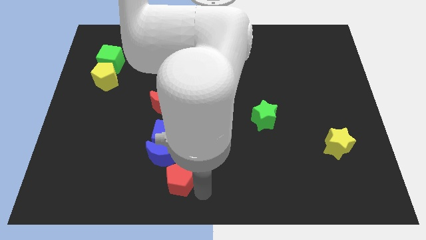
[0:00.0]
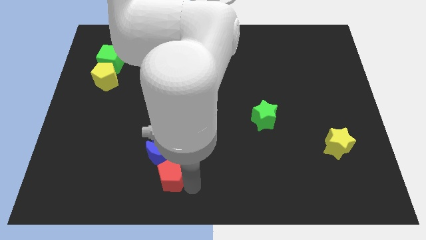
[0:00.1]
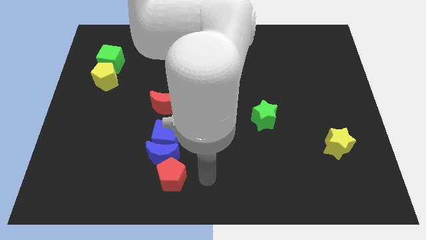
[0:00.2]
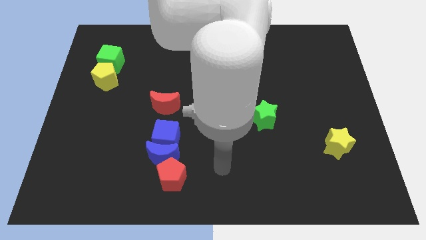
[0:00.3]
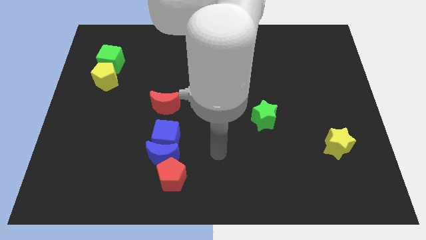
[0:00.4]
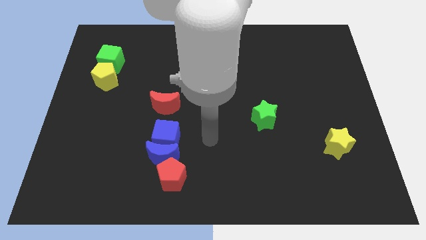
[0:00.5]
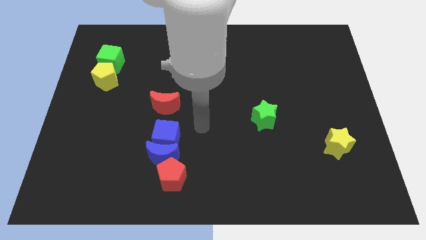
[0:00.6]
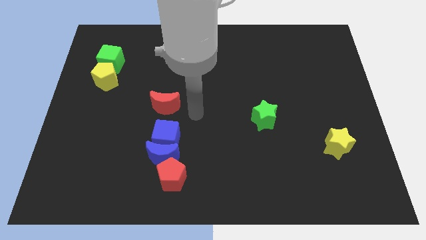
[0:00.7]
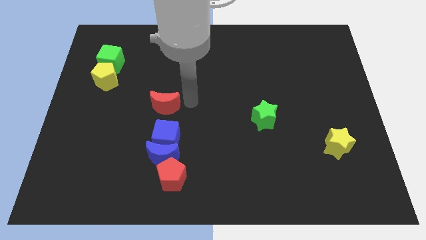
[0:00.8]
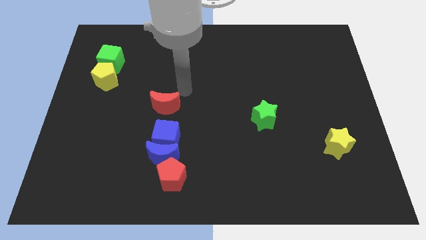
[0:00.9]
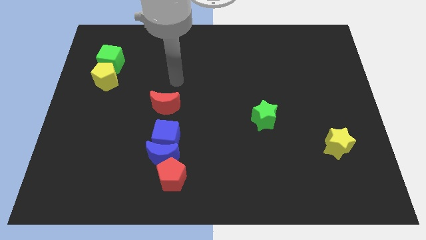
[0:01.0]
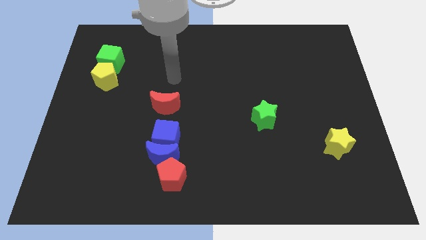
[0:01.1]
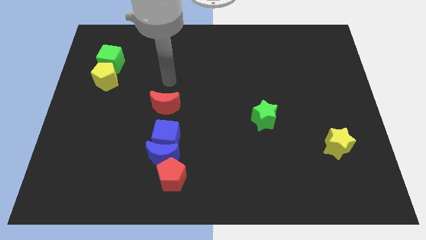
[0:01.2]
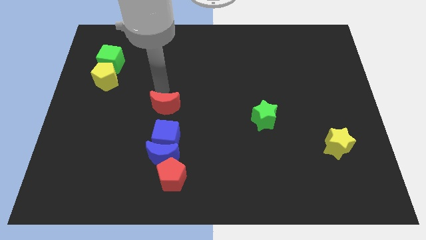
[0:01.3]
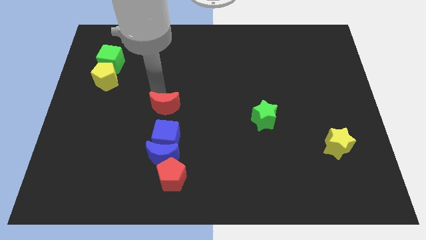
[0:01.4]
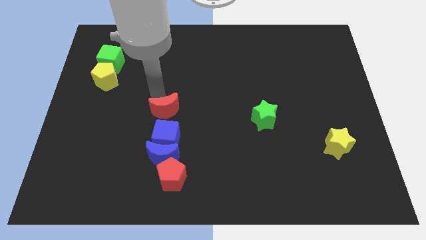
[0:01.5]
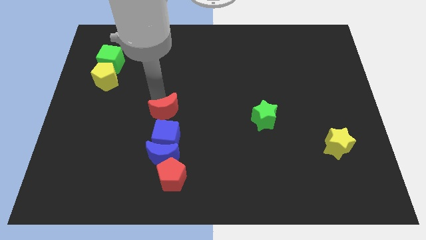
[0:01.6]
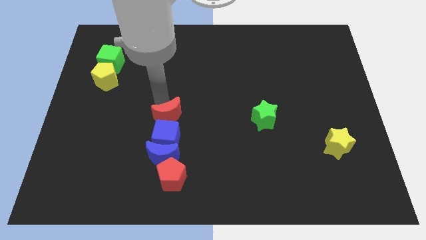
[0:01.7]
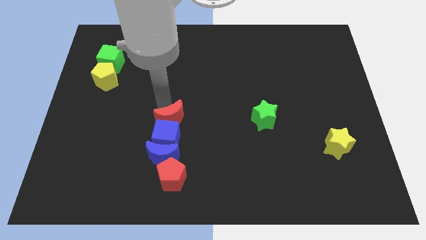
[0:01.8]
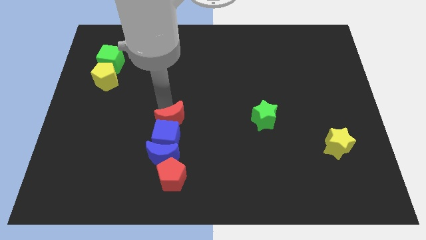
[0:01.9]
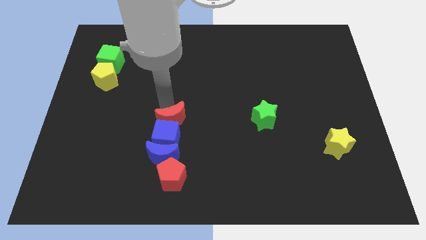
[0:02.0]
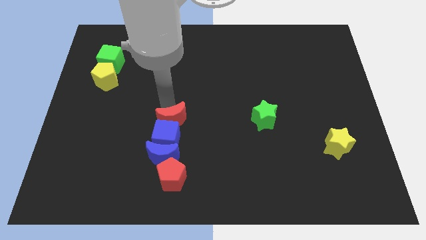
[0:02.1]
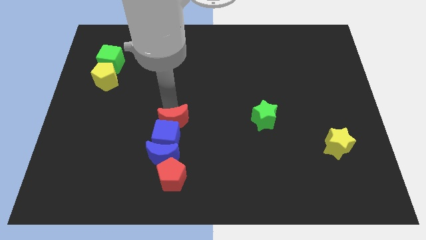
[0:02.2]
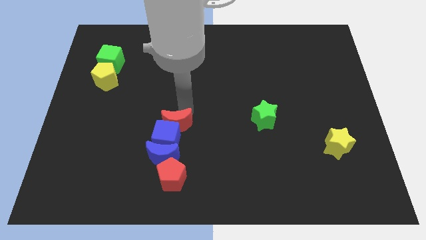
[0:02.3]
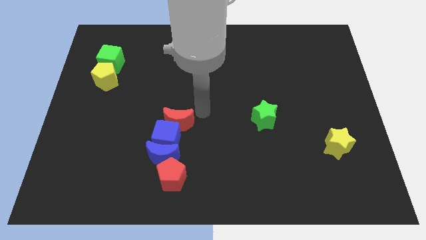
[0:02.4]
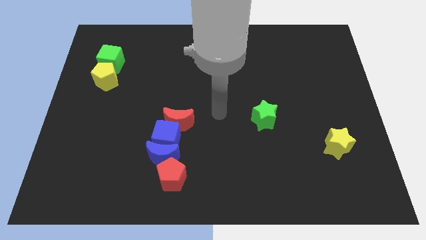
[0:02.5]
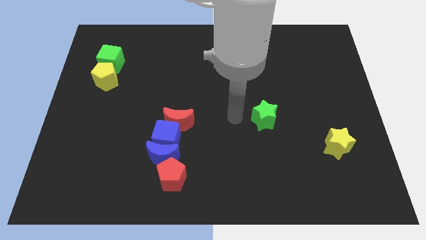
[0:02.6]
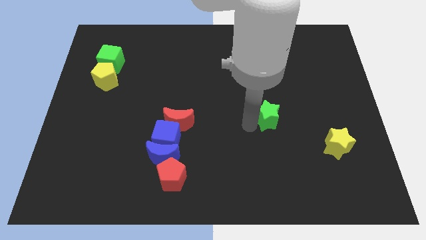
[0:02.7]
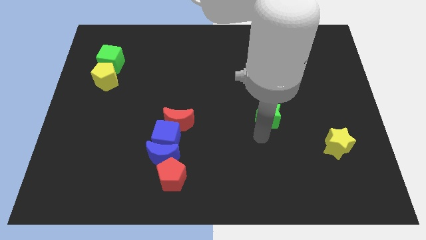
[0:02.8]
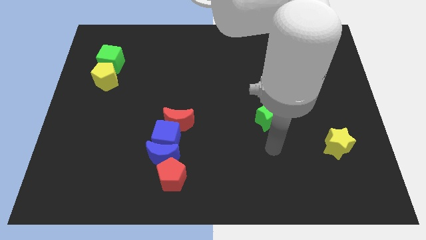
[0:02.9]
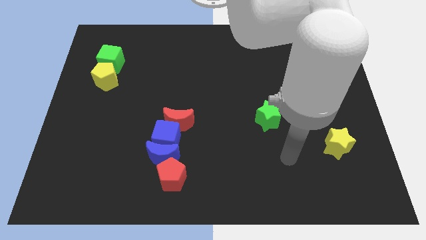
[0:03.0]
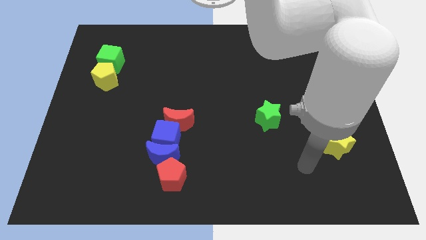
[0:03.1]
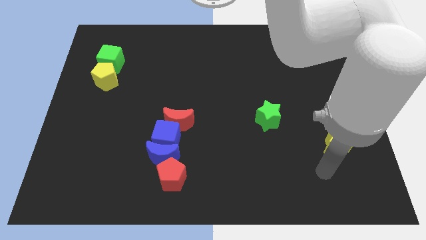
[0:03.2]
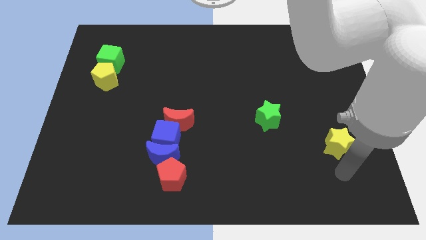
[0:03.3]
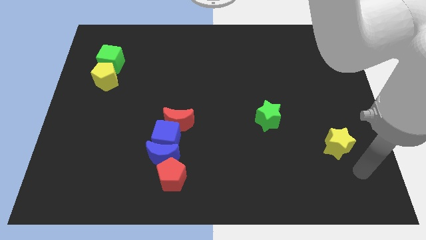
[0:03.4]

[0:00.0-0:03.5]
move the red crescent into the blue cube

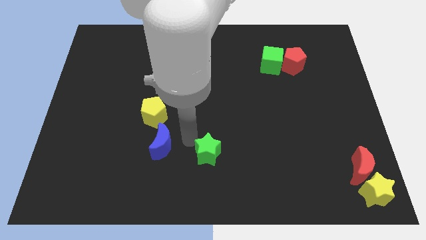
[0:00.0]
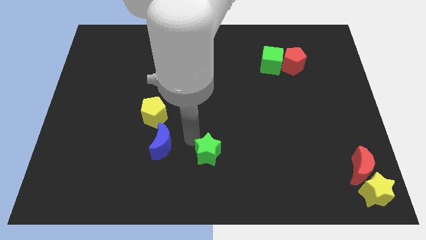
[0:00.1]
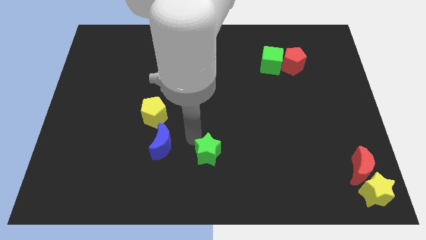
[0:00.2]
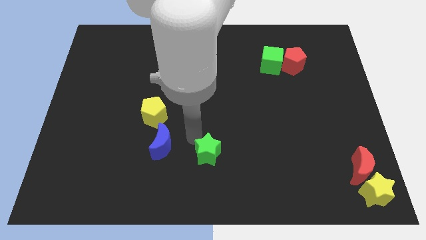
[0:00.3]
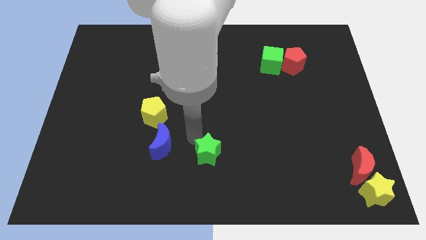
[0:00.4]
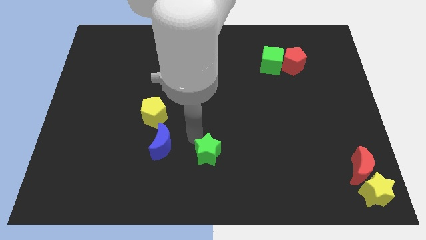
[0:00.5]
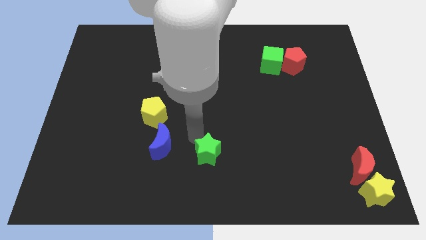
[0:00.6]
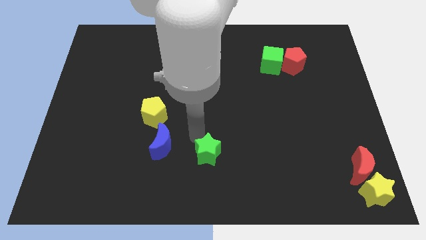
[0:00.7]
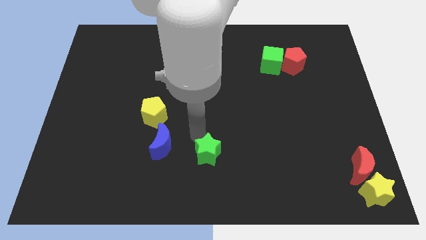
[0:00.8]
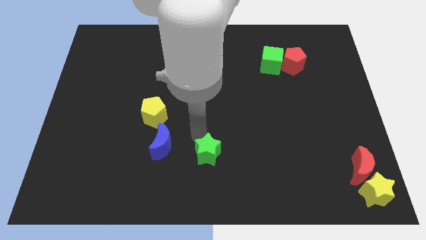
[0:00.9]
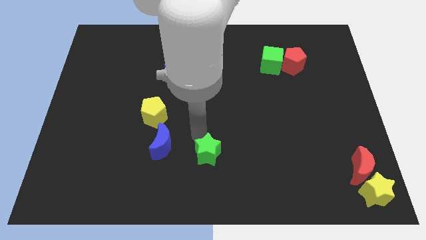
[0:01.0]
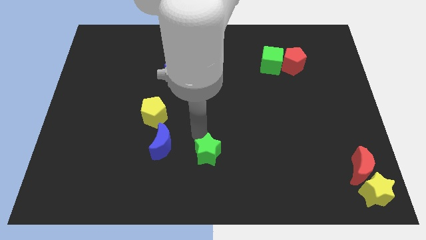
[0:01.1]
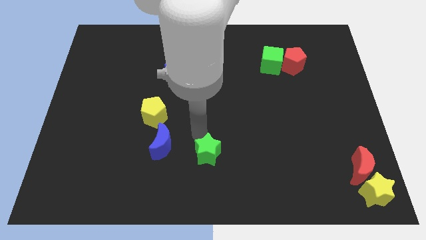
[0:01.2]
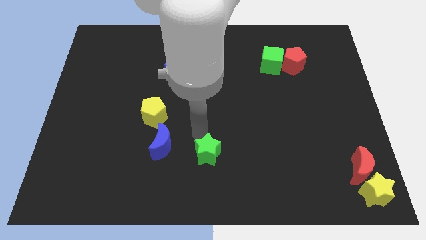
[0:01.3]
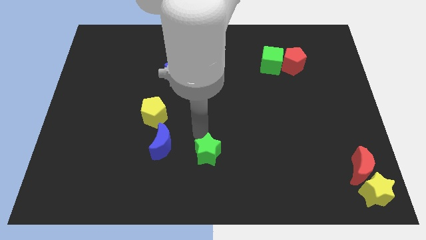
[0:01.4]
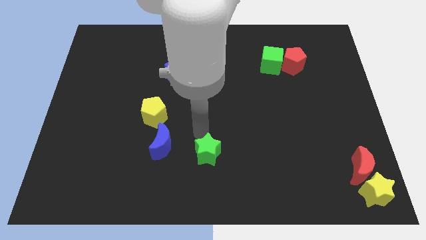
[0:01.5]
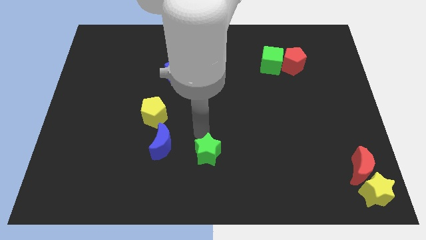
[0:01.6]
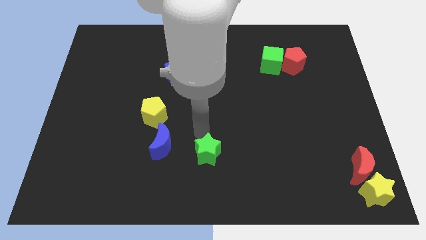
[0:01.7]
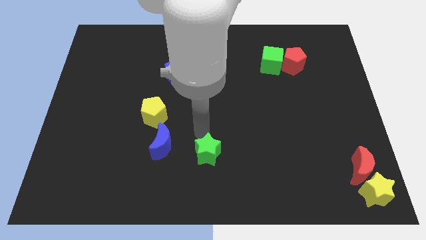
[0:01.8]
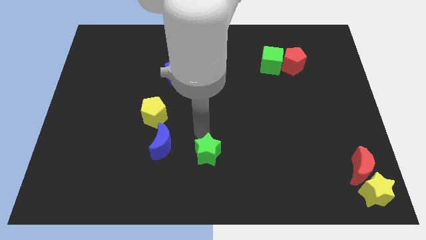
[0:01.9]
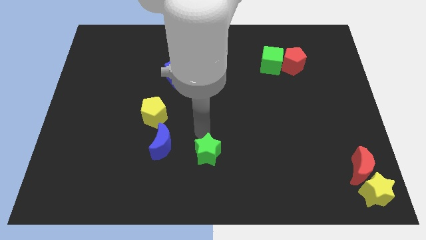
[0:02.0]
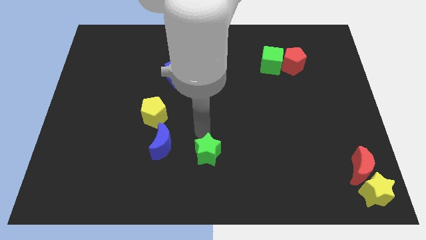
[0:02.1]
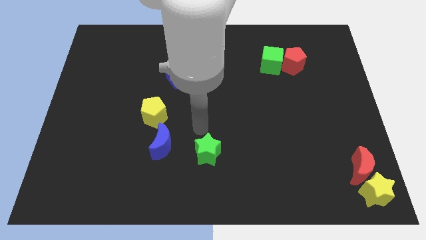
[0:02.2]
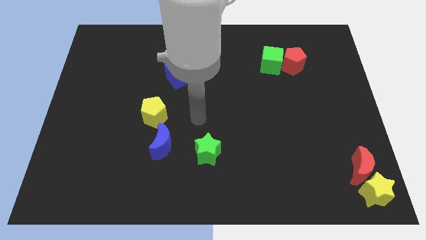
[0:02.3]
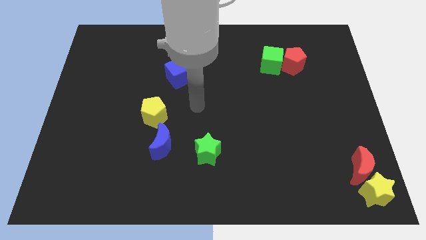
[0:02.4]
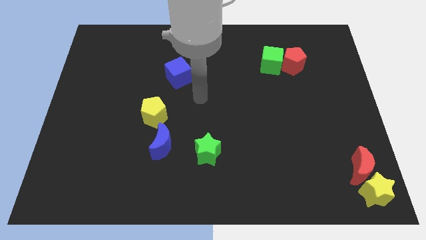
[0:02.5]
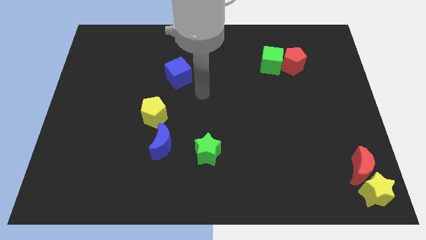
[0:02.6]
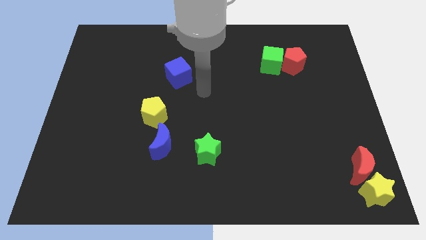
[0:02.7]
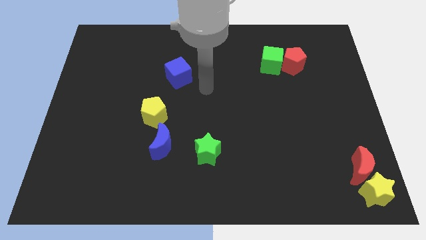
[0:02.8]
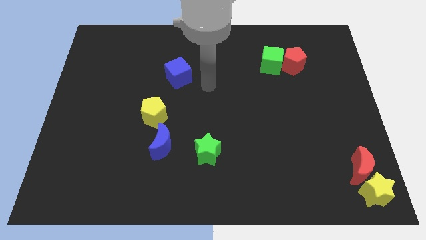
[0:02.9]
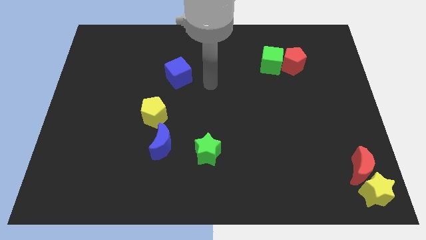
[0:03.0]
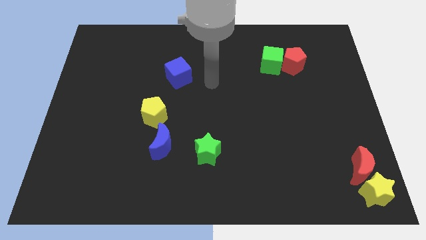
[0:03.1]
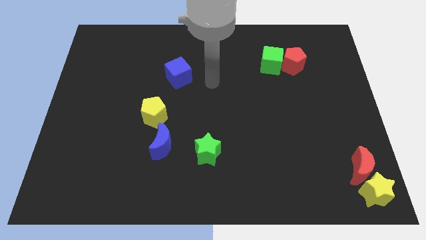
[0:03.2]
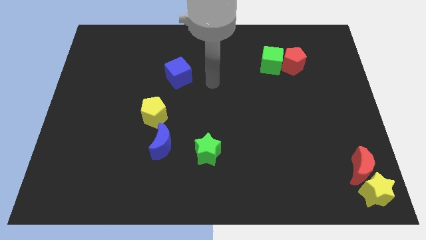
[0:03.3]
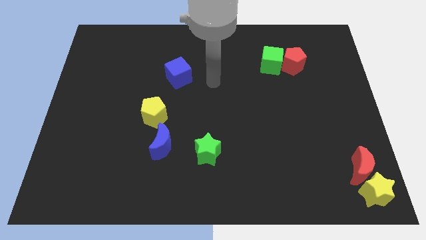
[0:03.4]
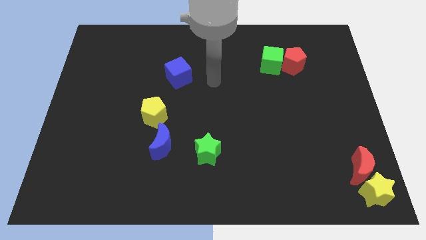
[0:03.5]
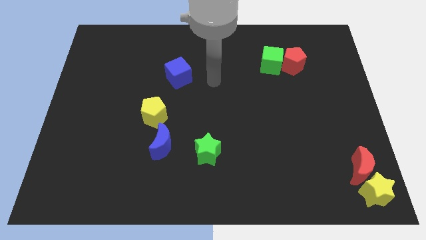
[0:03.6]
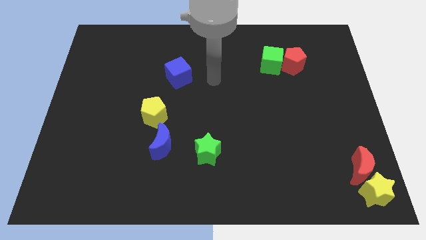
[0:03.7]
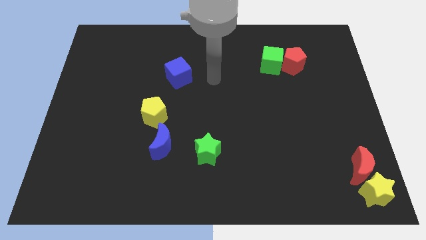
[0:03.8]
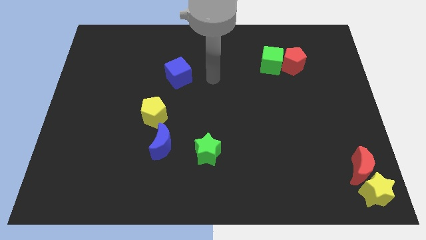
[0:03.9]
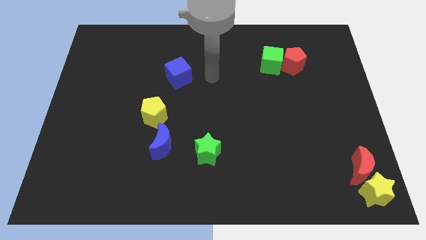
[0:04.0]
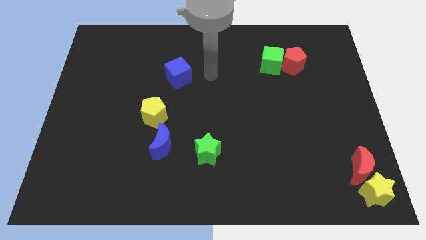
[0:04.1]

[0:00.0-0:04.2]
move your arm to the right of blue cube

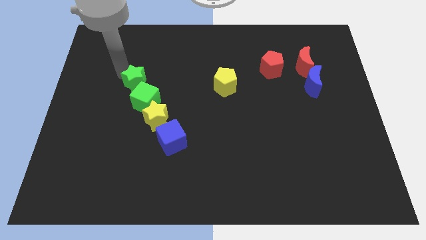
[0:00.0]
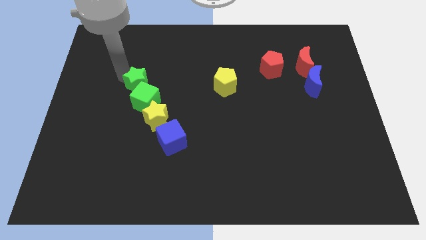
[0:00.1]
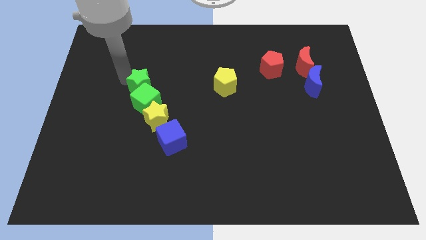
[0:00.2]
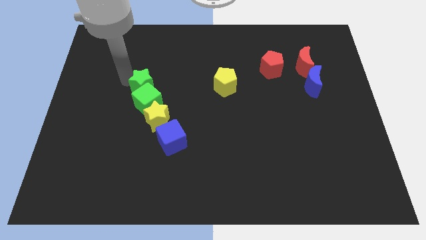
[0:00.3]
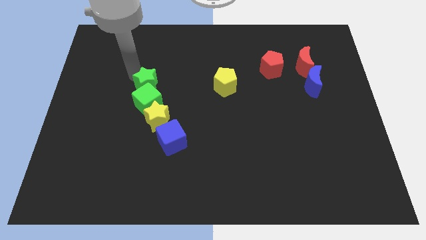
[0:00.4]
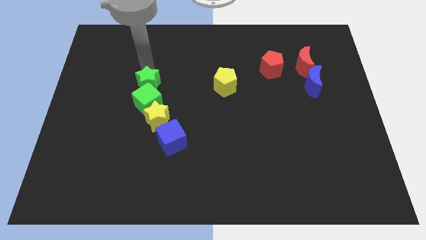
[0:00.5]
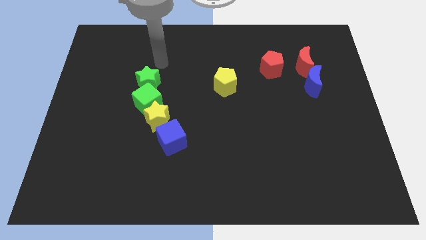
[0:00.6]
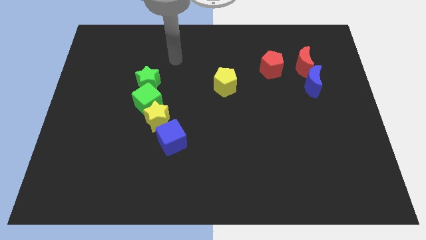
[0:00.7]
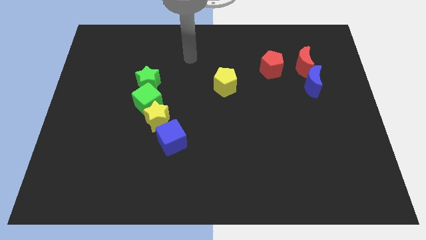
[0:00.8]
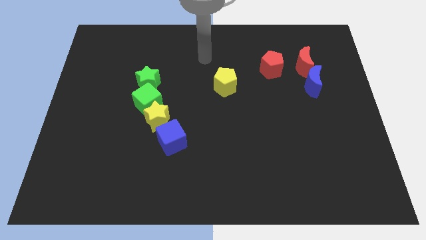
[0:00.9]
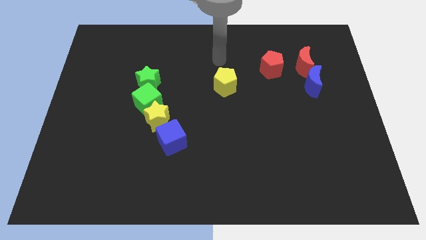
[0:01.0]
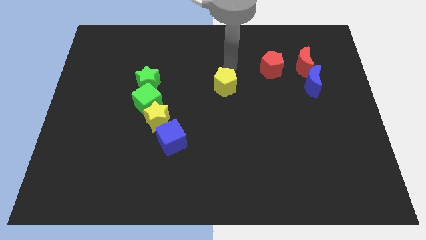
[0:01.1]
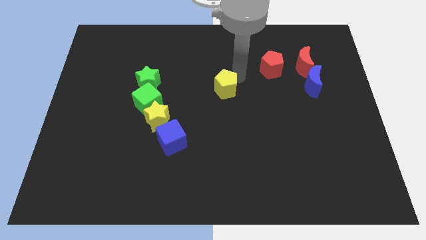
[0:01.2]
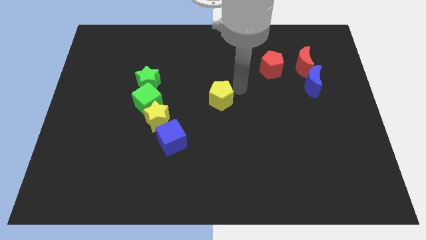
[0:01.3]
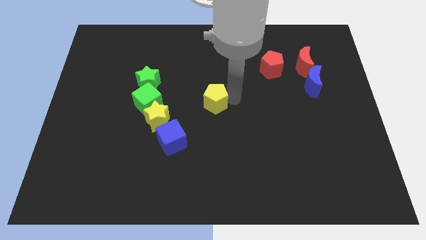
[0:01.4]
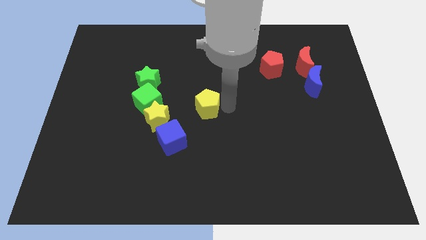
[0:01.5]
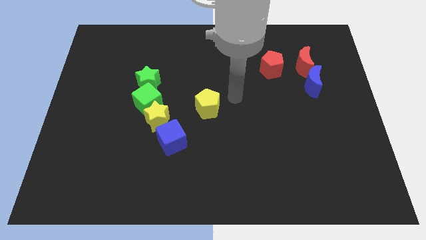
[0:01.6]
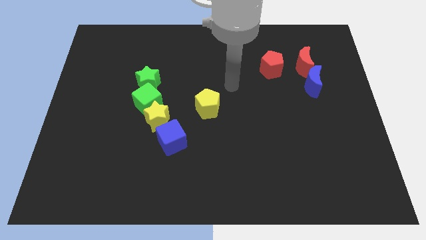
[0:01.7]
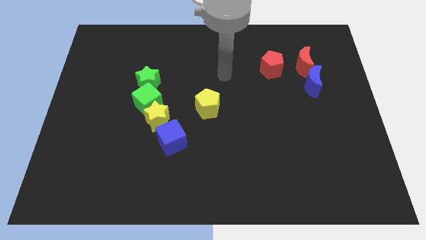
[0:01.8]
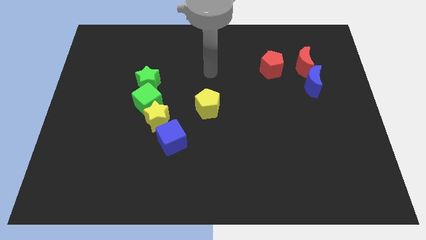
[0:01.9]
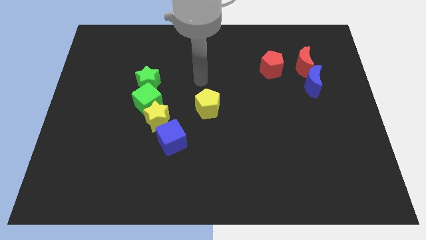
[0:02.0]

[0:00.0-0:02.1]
place the yellow pentagon diagonally to red pentagon
